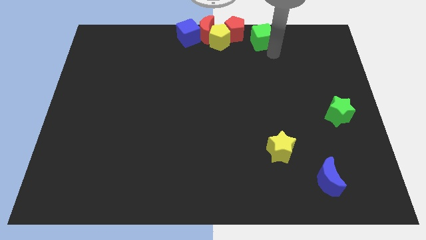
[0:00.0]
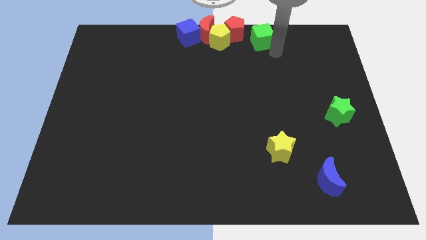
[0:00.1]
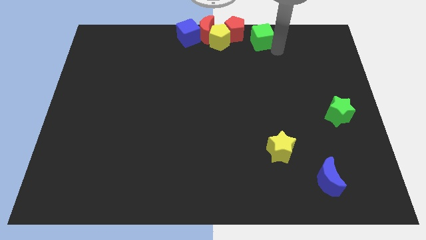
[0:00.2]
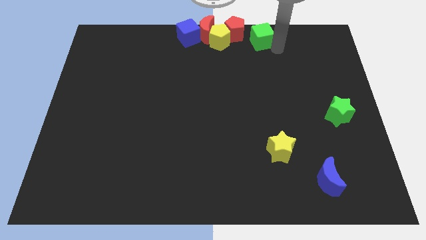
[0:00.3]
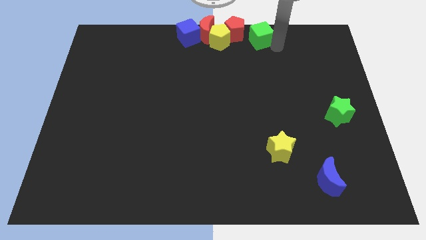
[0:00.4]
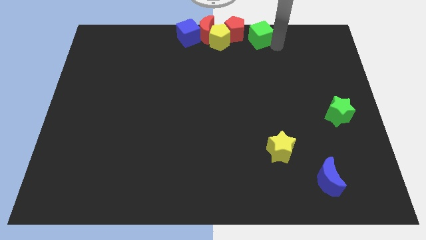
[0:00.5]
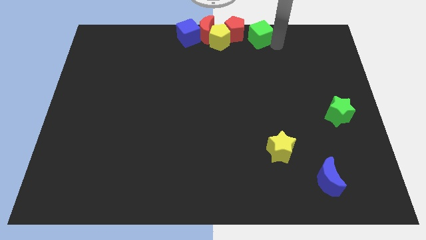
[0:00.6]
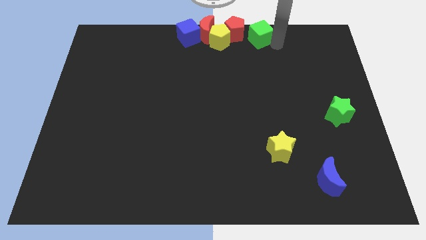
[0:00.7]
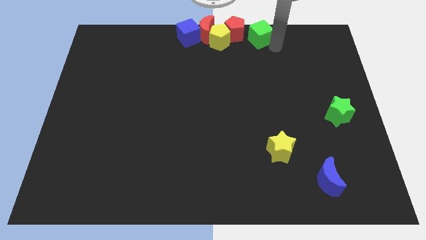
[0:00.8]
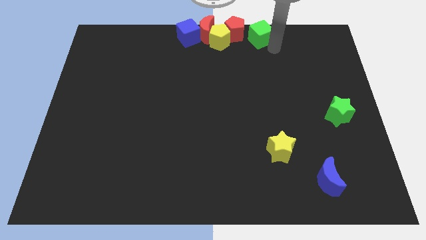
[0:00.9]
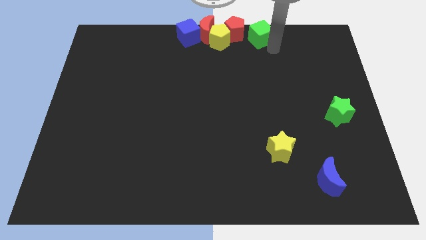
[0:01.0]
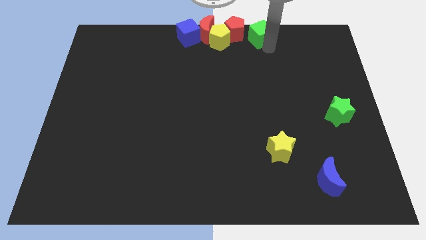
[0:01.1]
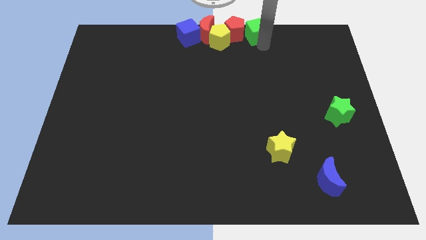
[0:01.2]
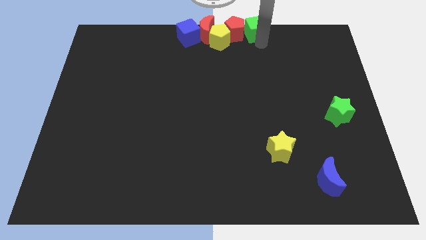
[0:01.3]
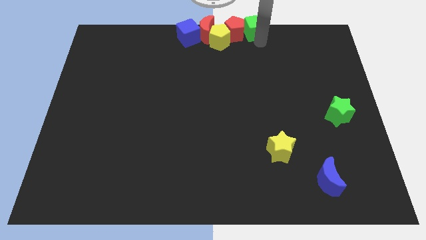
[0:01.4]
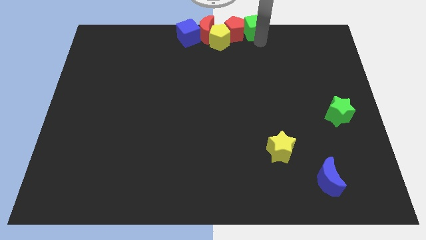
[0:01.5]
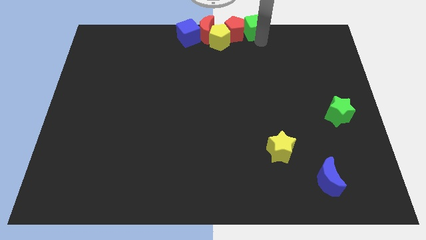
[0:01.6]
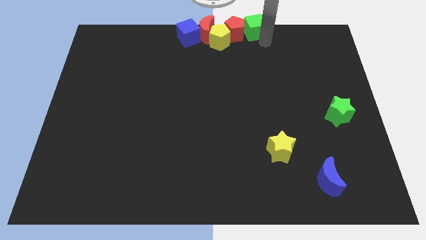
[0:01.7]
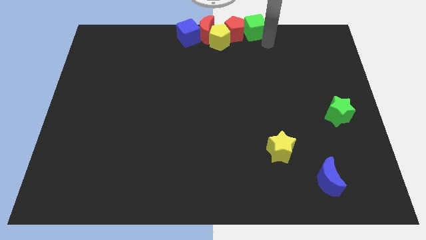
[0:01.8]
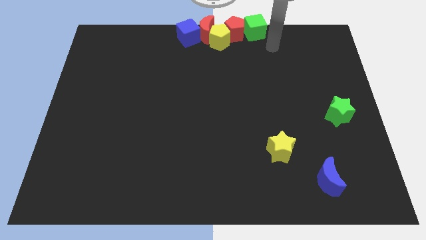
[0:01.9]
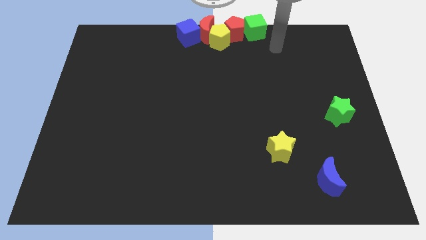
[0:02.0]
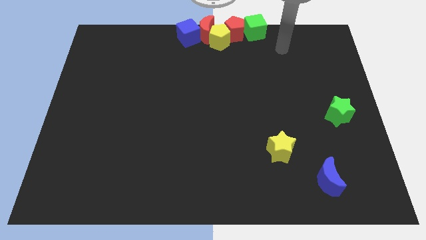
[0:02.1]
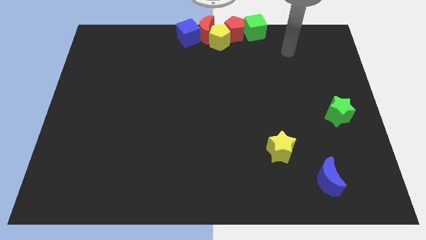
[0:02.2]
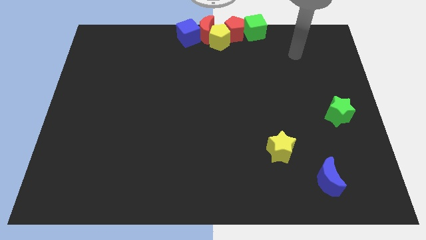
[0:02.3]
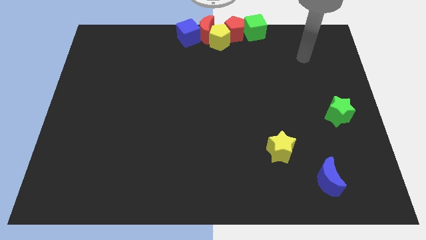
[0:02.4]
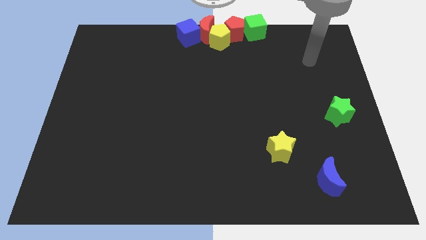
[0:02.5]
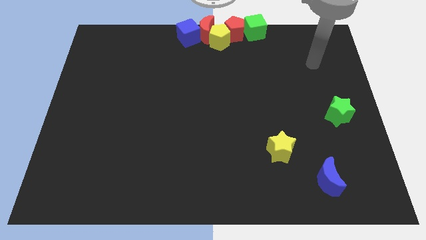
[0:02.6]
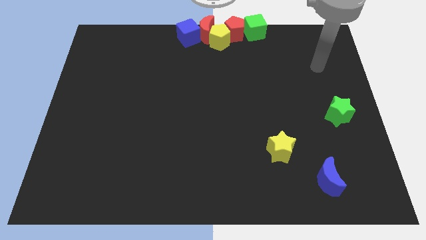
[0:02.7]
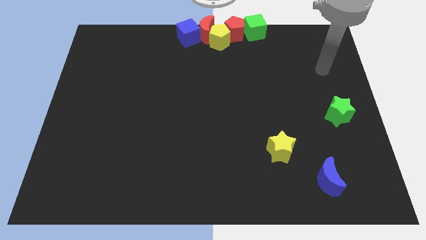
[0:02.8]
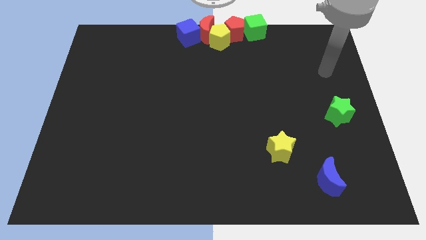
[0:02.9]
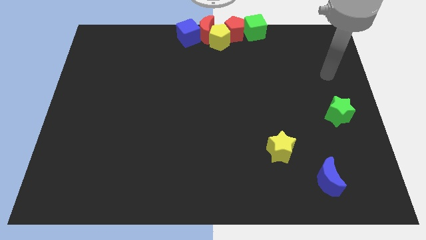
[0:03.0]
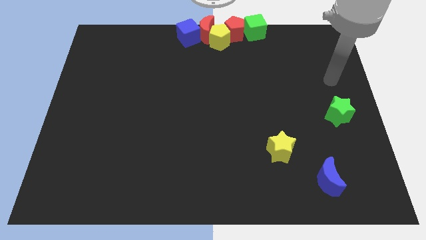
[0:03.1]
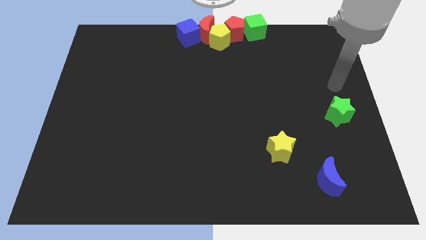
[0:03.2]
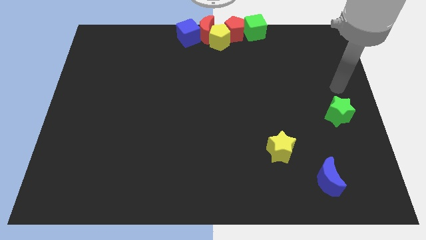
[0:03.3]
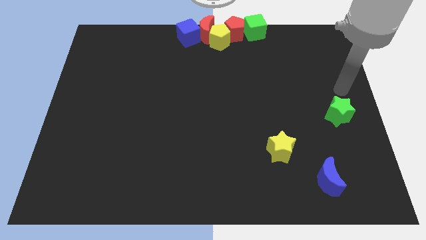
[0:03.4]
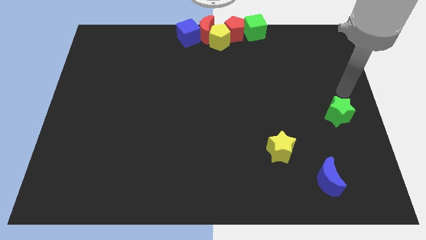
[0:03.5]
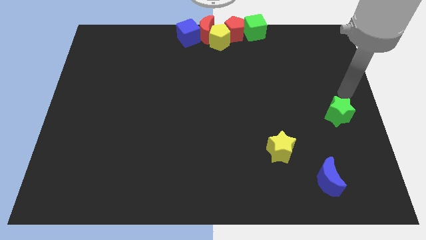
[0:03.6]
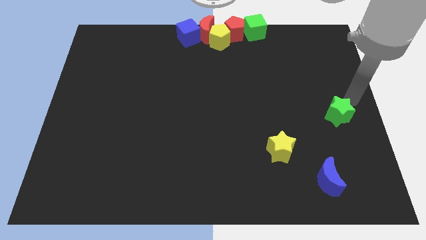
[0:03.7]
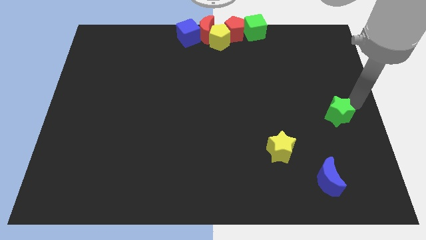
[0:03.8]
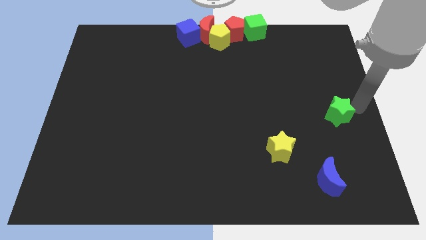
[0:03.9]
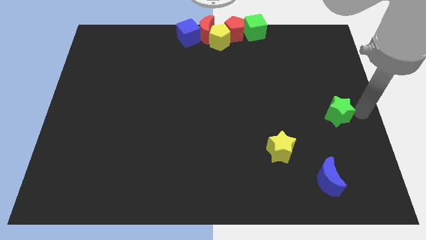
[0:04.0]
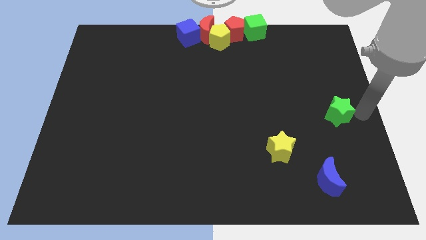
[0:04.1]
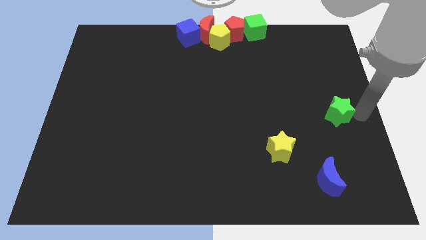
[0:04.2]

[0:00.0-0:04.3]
adjust the green cube into the red pentagon from right side

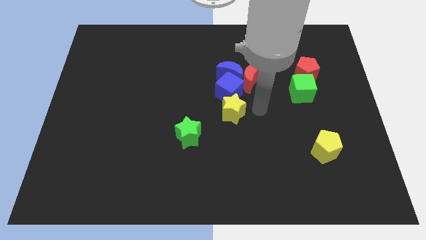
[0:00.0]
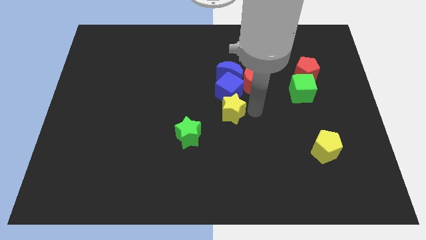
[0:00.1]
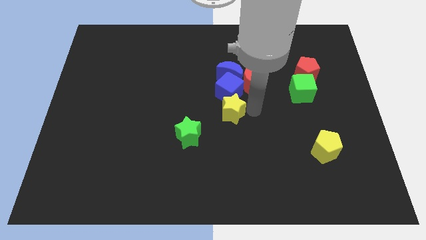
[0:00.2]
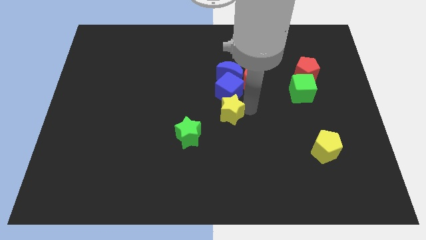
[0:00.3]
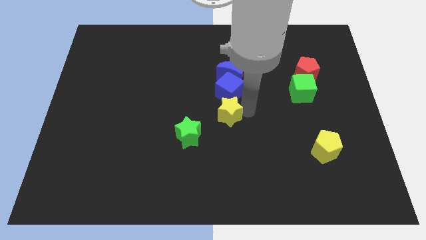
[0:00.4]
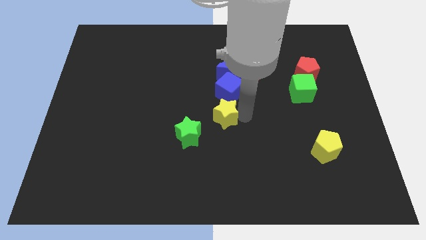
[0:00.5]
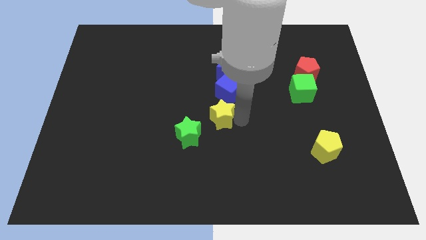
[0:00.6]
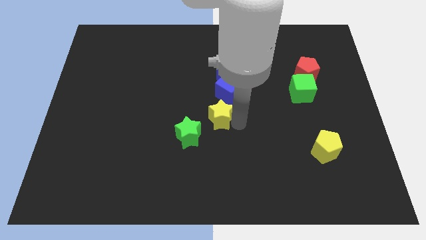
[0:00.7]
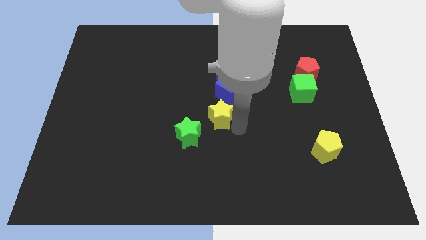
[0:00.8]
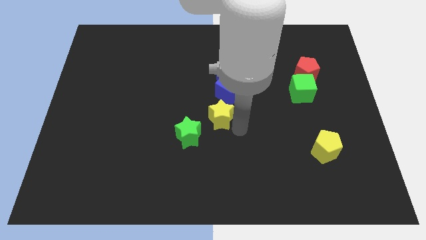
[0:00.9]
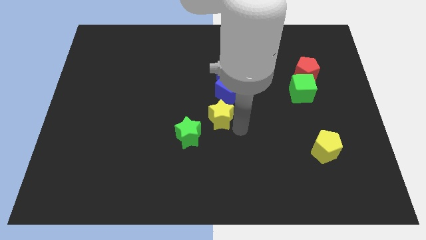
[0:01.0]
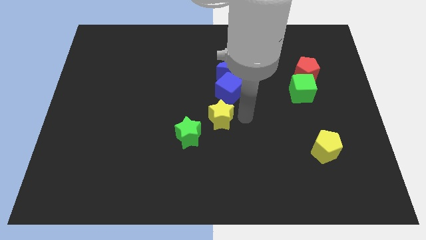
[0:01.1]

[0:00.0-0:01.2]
push the yellow star towards left a bit

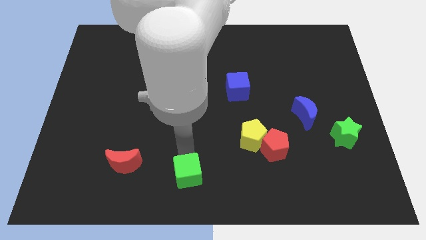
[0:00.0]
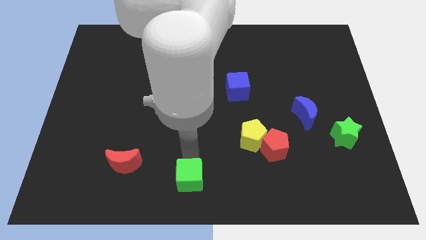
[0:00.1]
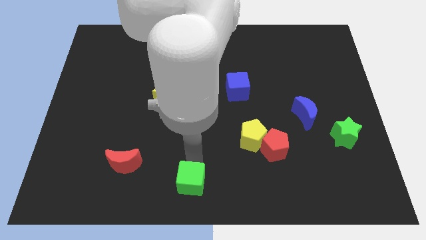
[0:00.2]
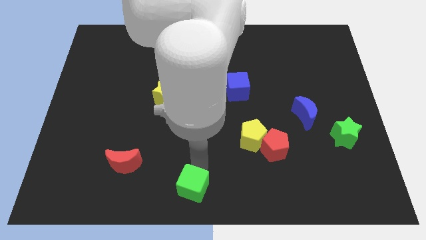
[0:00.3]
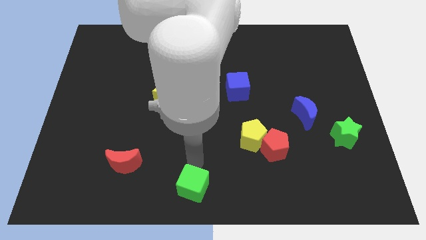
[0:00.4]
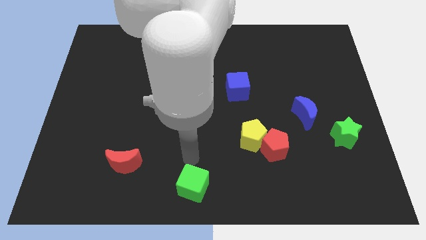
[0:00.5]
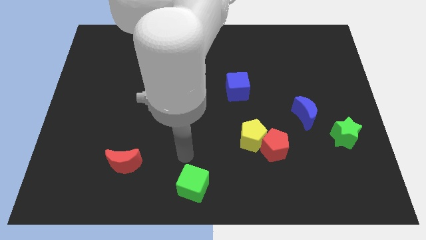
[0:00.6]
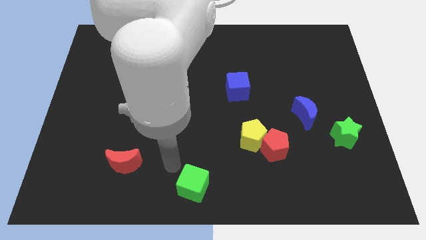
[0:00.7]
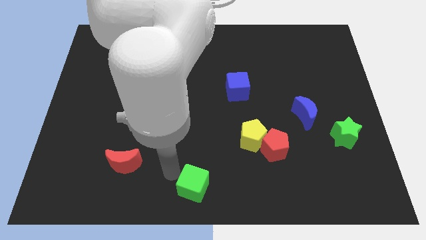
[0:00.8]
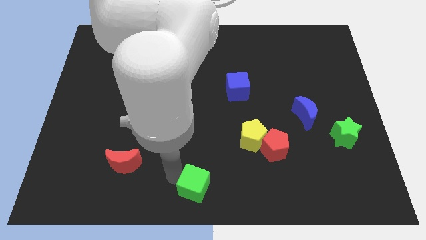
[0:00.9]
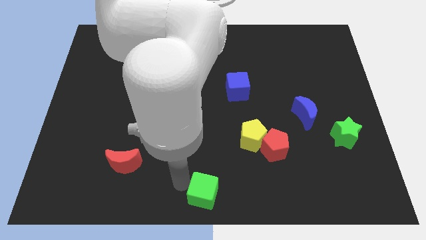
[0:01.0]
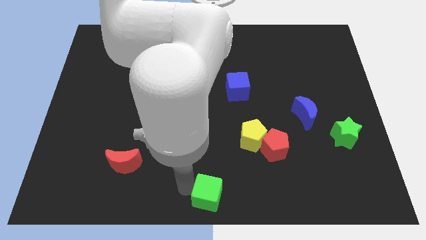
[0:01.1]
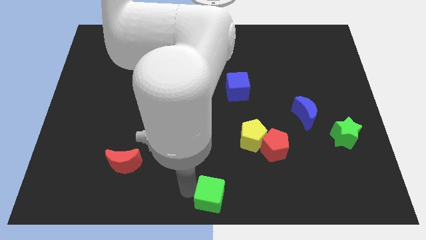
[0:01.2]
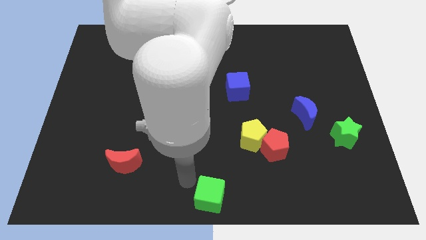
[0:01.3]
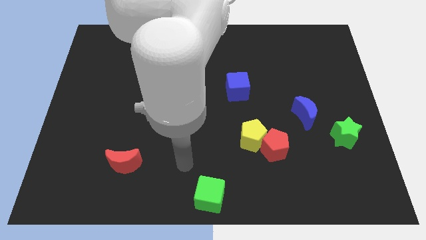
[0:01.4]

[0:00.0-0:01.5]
move the green cube to the bottom centre of the board

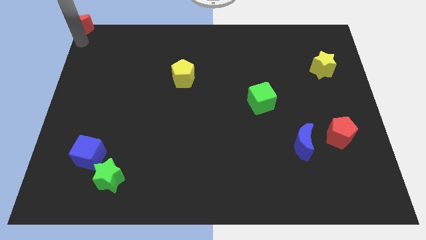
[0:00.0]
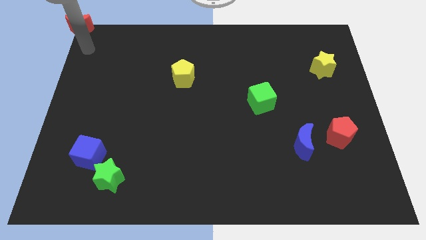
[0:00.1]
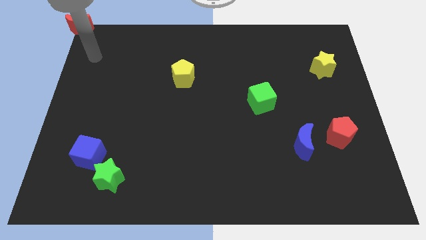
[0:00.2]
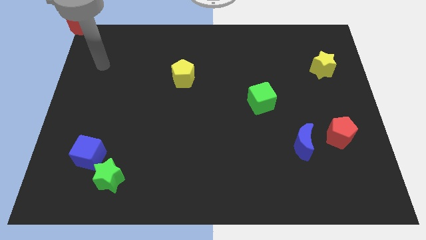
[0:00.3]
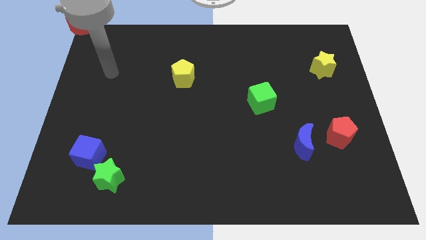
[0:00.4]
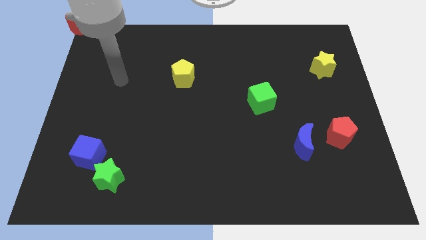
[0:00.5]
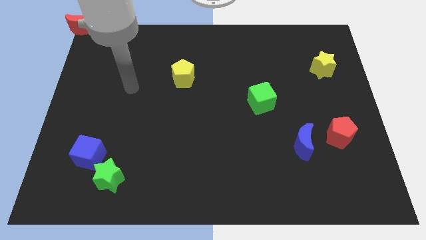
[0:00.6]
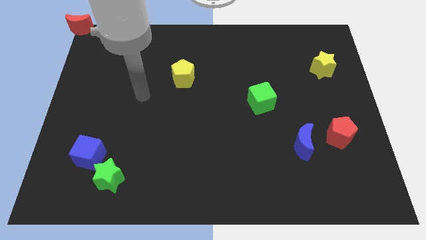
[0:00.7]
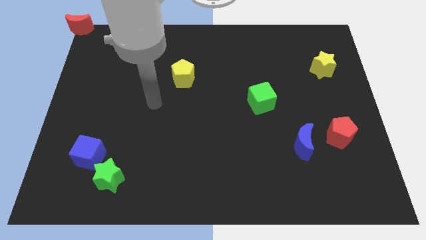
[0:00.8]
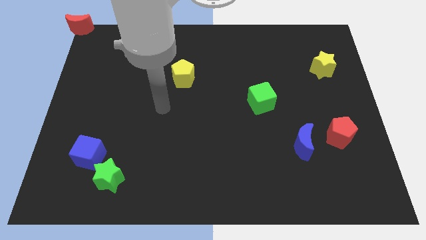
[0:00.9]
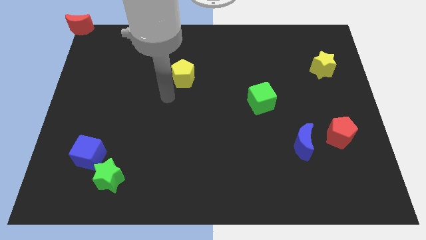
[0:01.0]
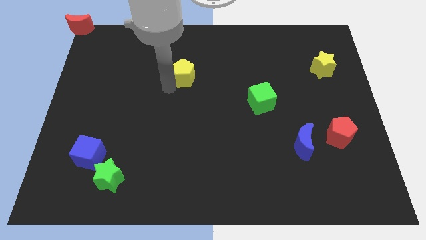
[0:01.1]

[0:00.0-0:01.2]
move your arm bottom left to the yellow pentagon

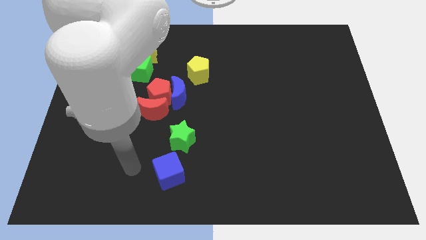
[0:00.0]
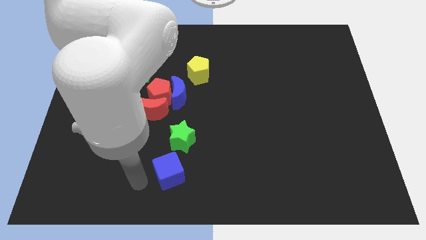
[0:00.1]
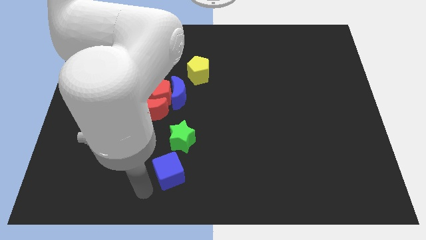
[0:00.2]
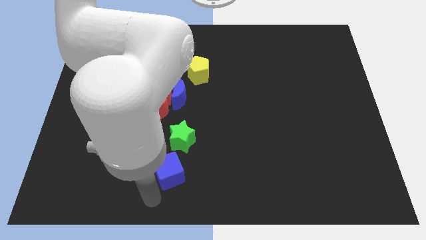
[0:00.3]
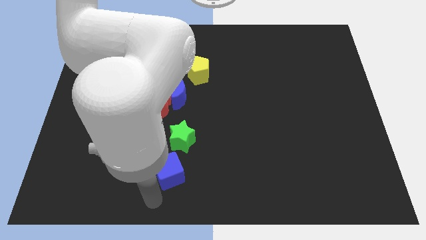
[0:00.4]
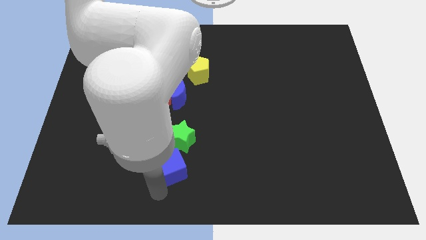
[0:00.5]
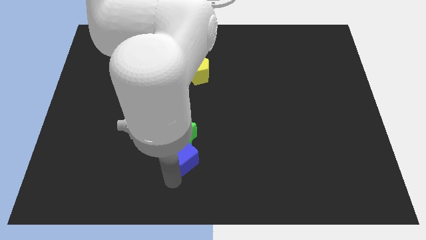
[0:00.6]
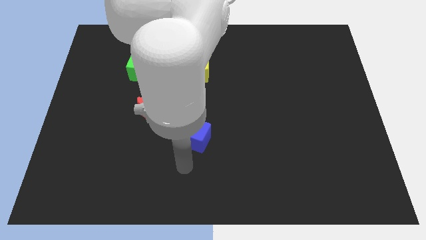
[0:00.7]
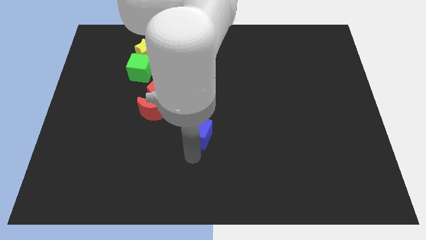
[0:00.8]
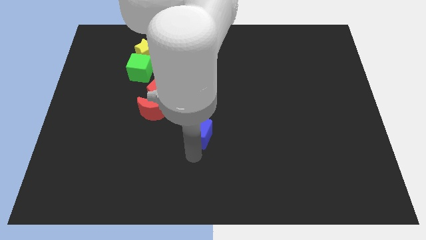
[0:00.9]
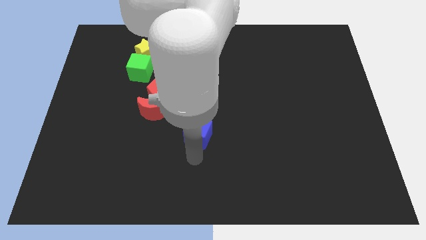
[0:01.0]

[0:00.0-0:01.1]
push the green star with blue cube
